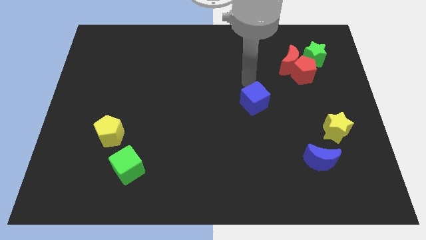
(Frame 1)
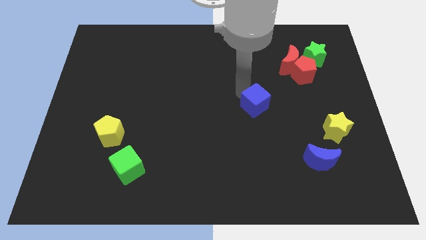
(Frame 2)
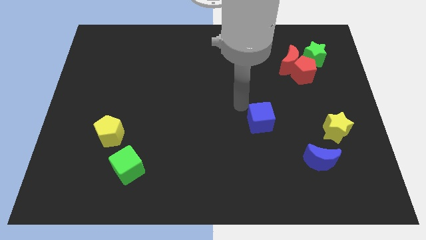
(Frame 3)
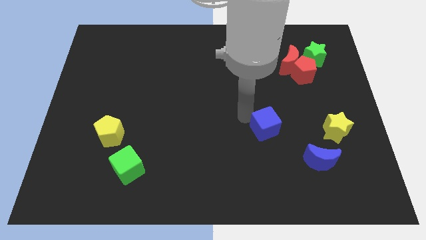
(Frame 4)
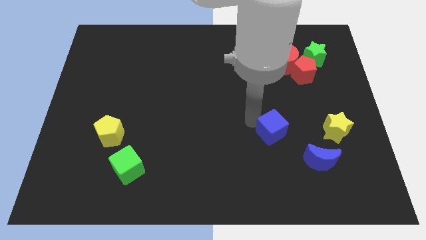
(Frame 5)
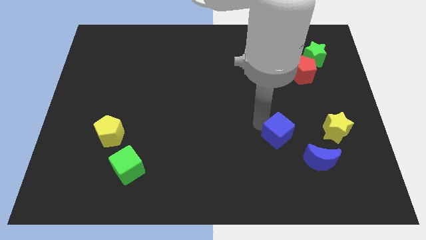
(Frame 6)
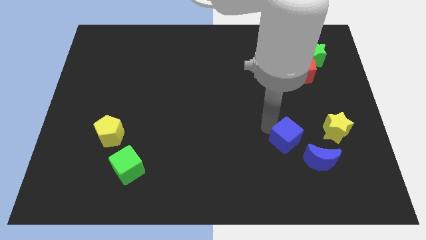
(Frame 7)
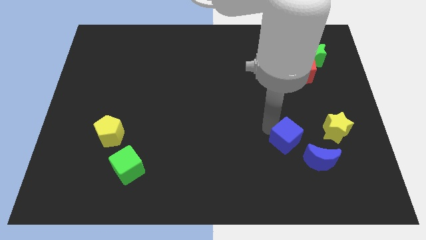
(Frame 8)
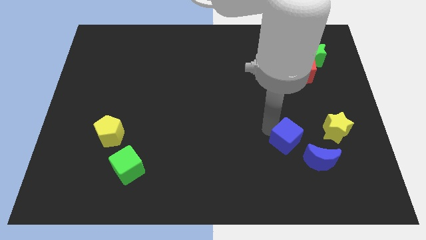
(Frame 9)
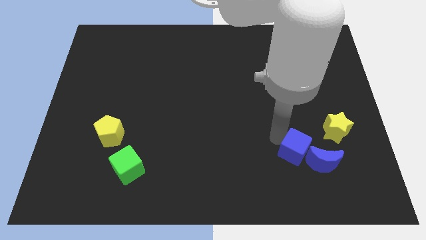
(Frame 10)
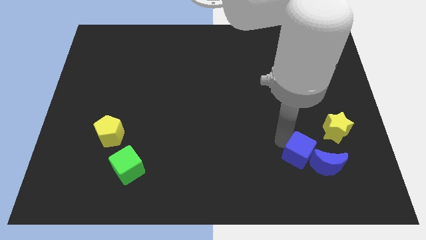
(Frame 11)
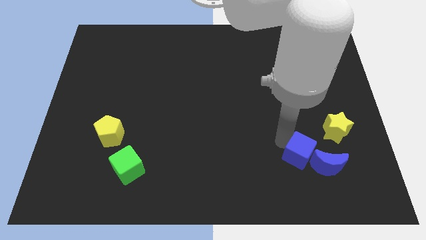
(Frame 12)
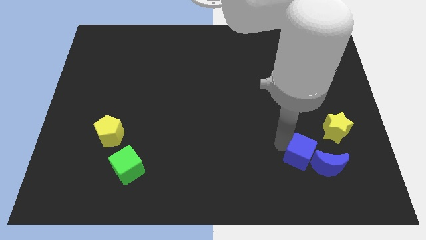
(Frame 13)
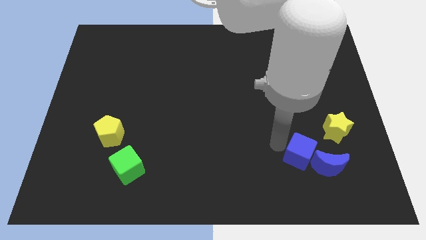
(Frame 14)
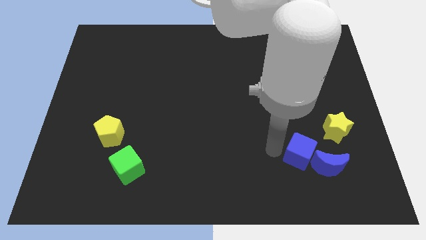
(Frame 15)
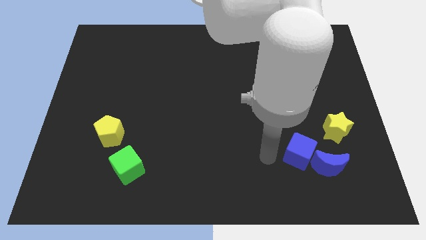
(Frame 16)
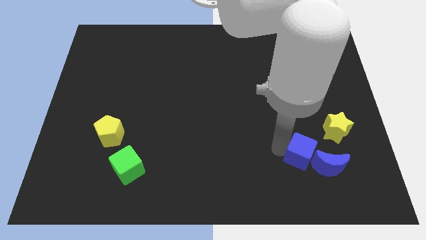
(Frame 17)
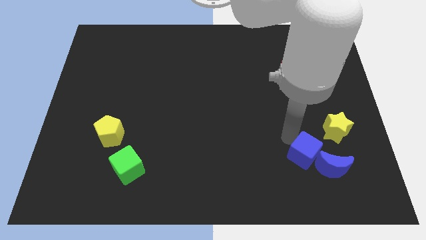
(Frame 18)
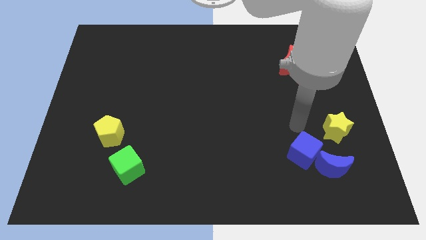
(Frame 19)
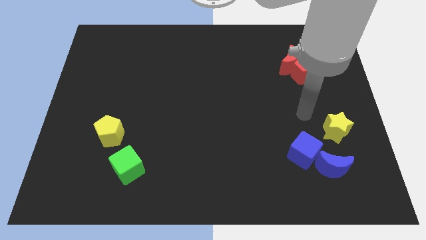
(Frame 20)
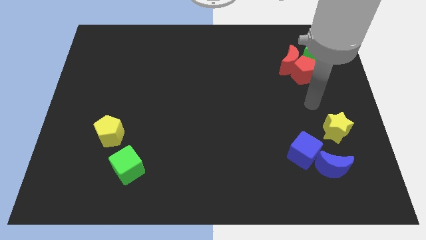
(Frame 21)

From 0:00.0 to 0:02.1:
move the blue cube left to the blue crescent

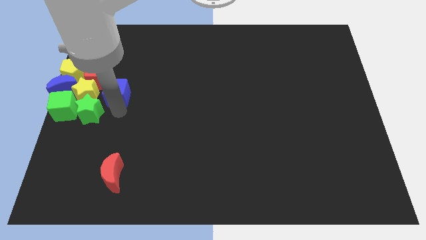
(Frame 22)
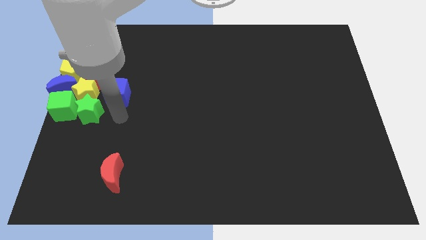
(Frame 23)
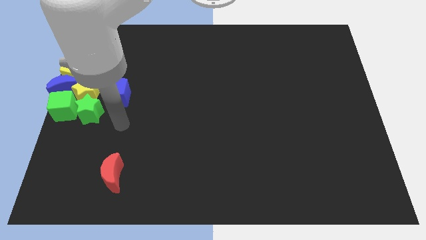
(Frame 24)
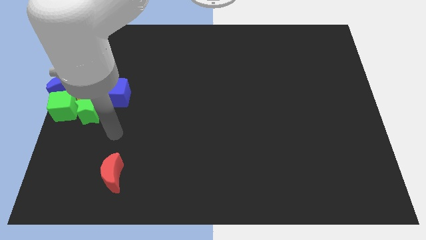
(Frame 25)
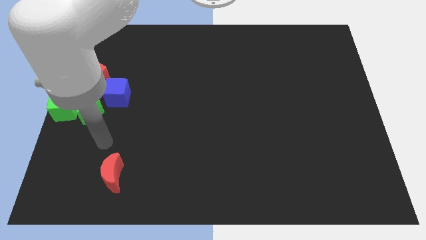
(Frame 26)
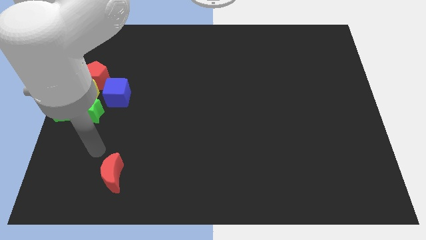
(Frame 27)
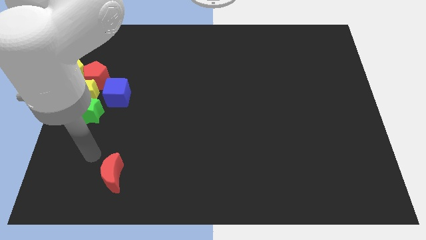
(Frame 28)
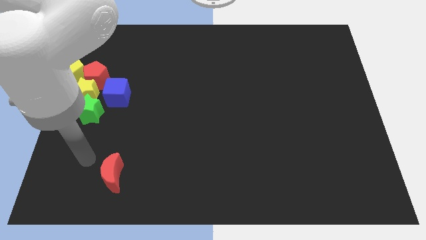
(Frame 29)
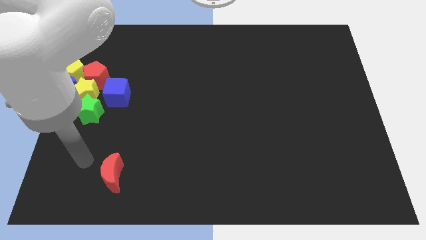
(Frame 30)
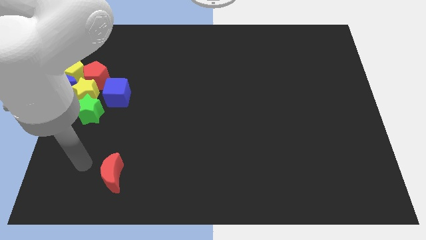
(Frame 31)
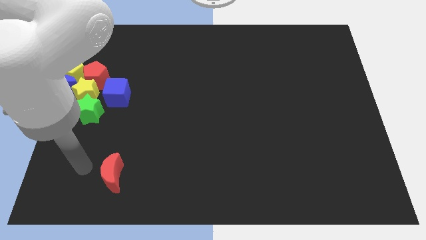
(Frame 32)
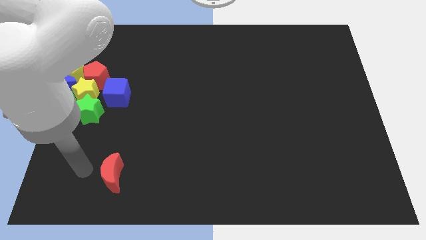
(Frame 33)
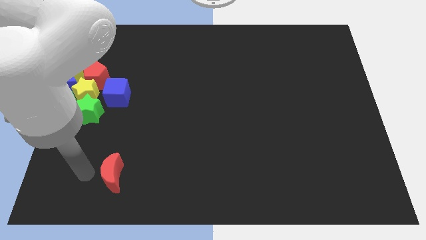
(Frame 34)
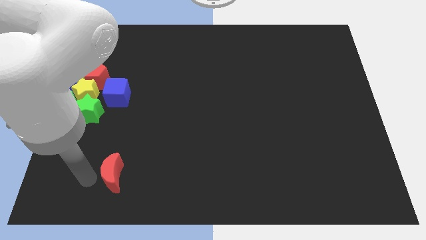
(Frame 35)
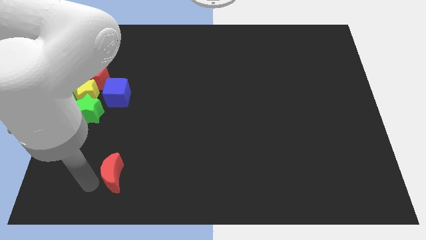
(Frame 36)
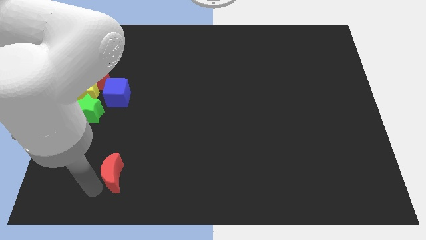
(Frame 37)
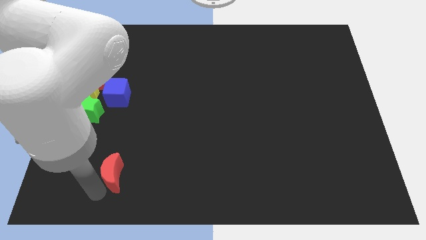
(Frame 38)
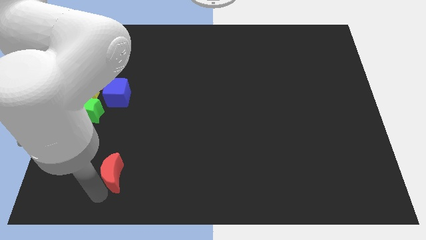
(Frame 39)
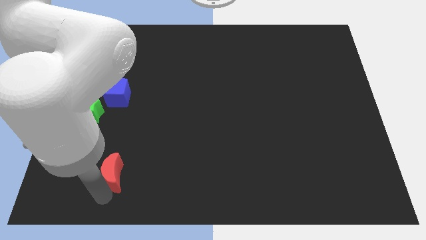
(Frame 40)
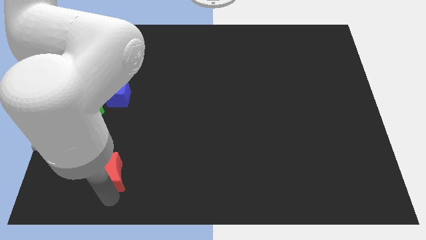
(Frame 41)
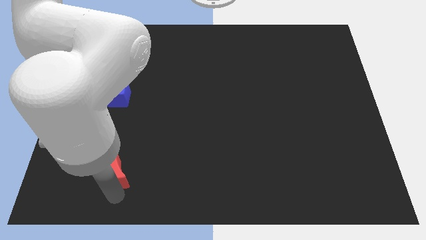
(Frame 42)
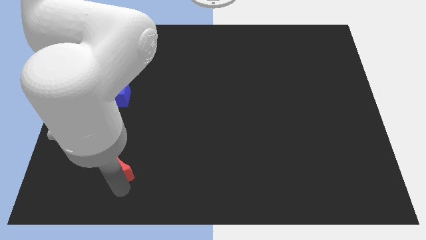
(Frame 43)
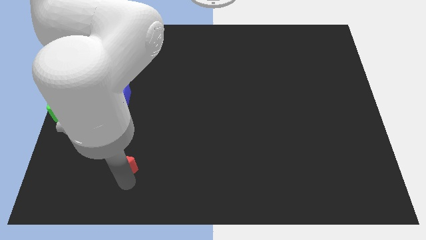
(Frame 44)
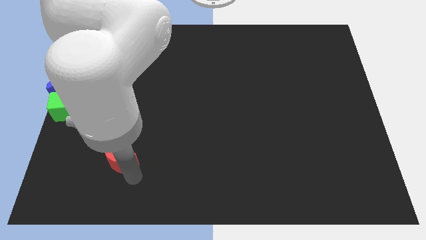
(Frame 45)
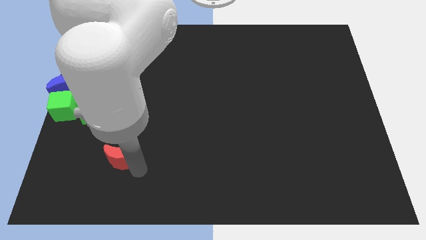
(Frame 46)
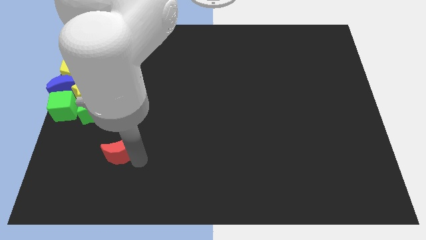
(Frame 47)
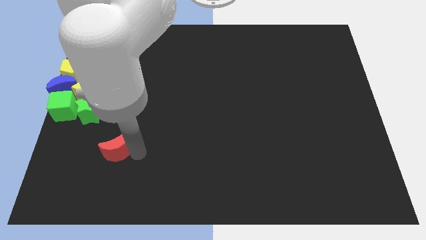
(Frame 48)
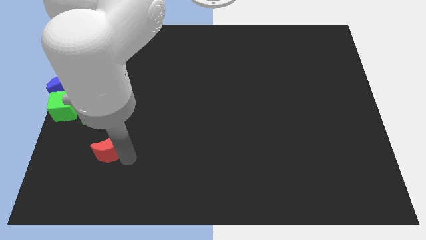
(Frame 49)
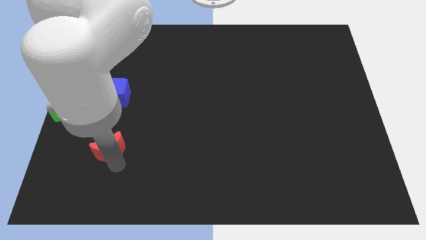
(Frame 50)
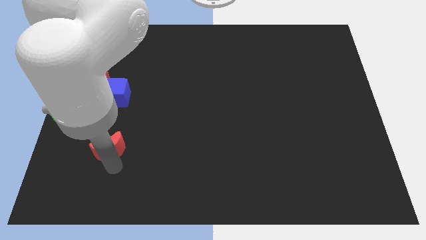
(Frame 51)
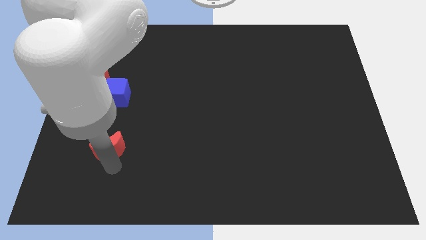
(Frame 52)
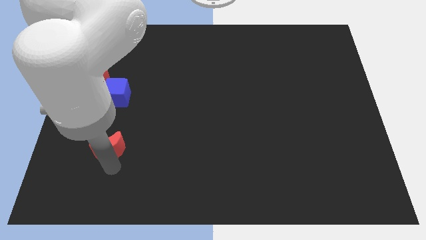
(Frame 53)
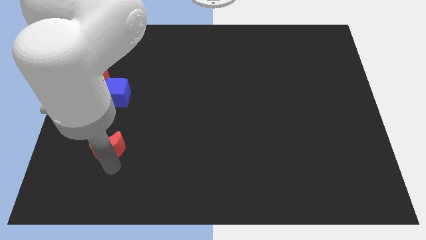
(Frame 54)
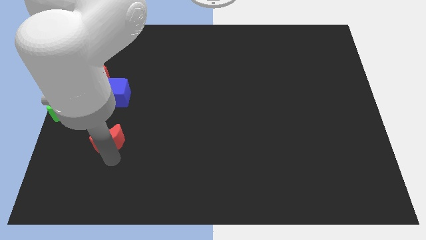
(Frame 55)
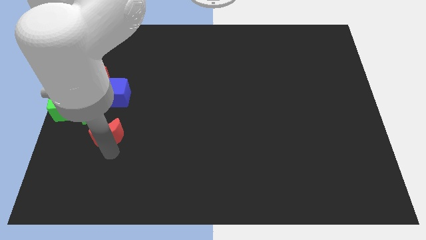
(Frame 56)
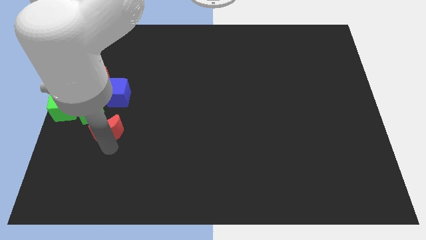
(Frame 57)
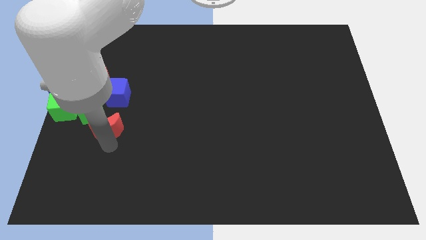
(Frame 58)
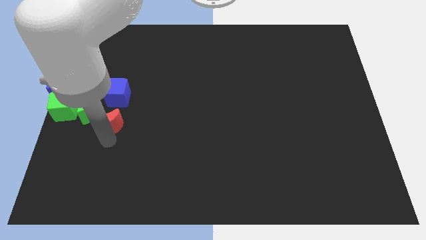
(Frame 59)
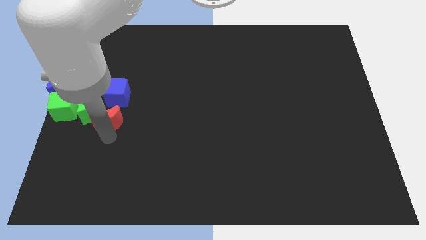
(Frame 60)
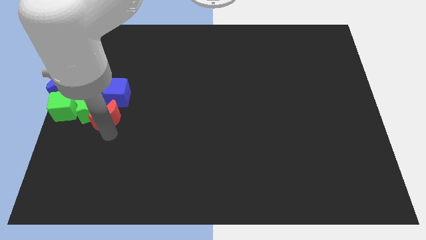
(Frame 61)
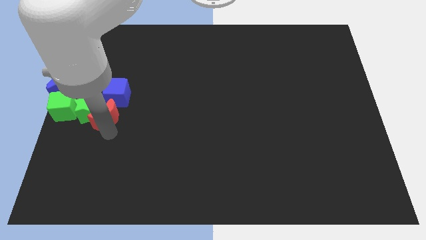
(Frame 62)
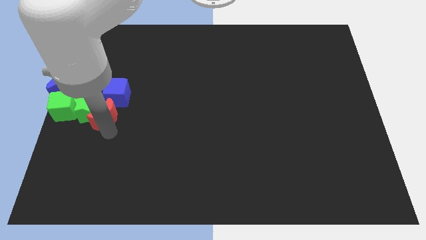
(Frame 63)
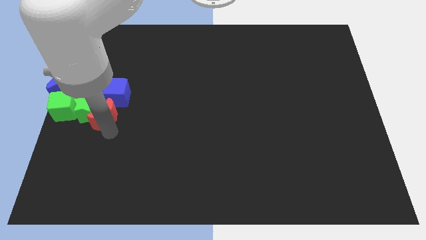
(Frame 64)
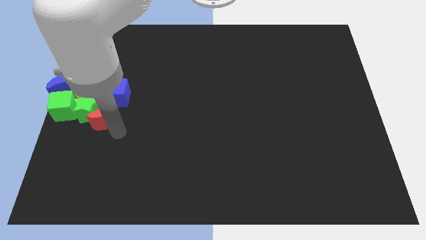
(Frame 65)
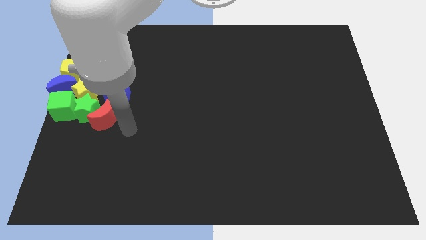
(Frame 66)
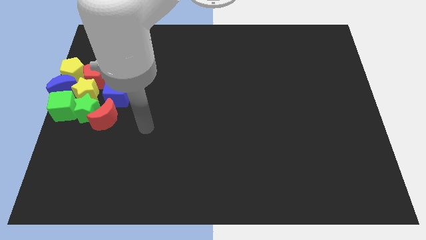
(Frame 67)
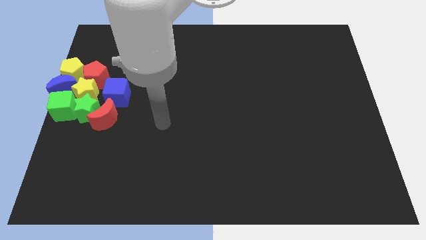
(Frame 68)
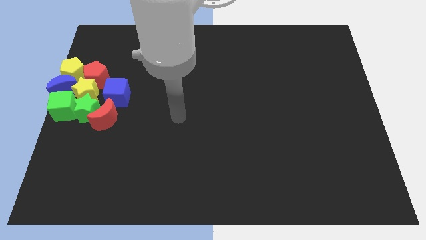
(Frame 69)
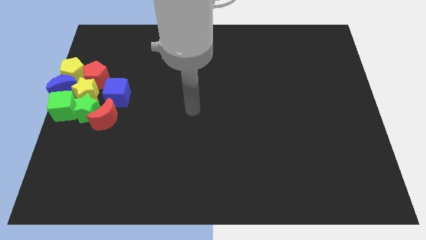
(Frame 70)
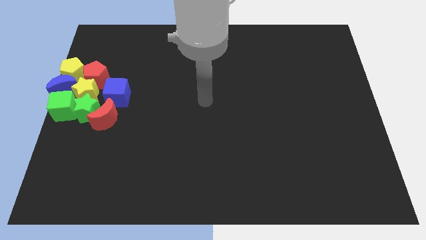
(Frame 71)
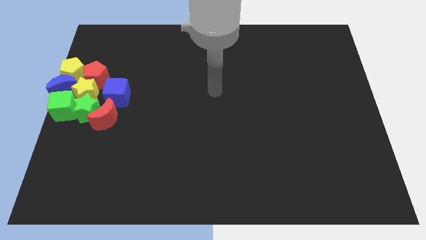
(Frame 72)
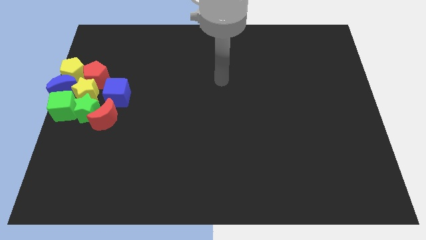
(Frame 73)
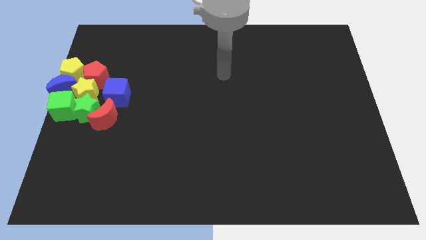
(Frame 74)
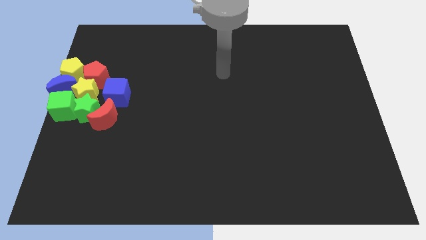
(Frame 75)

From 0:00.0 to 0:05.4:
place the red moon under the blue cube

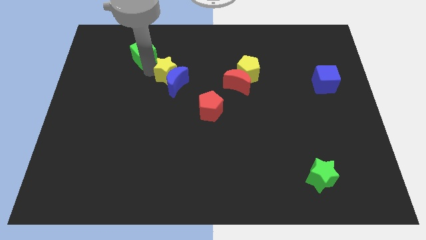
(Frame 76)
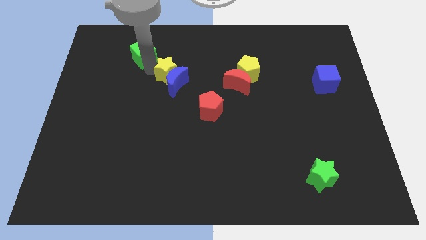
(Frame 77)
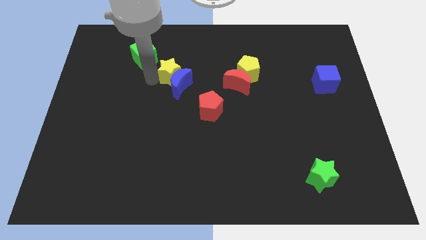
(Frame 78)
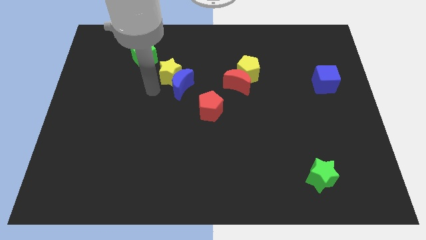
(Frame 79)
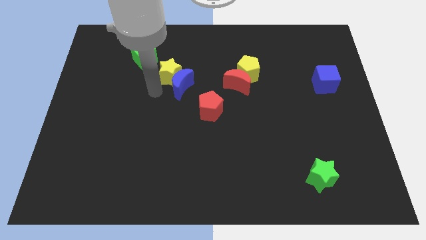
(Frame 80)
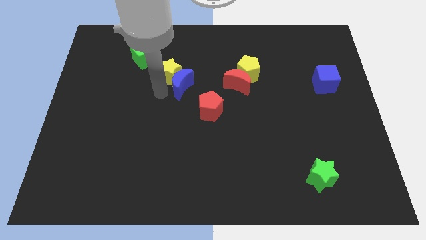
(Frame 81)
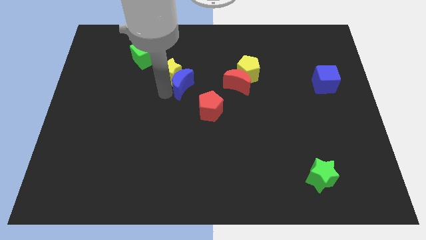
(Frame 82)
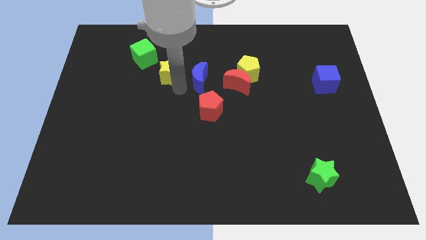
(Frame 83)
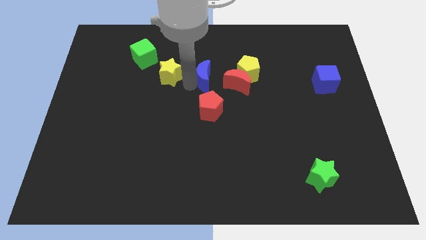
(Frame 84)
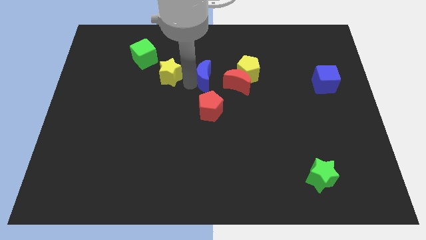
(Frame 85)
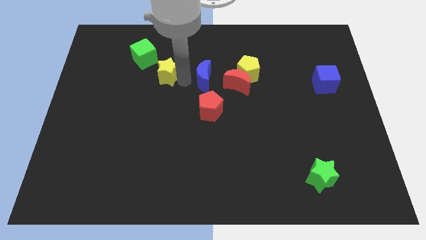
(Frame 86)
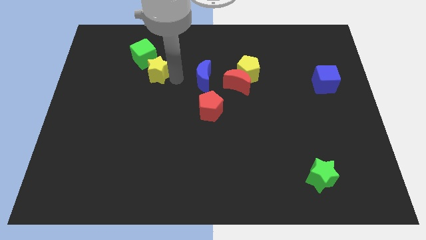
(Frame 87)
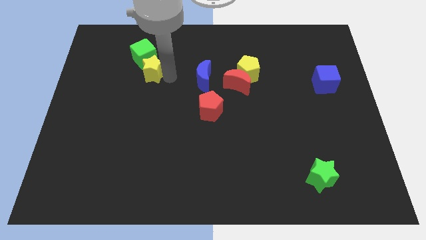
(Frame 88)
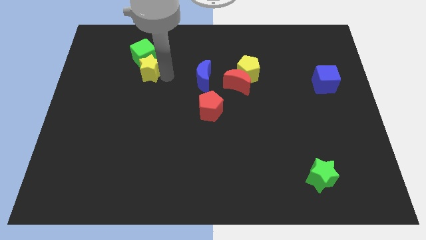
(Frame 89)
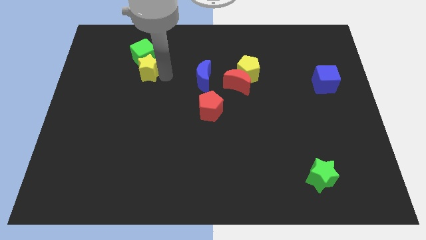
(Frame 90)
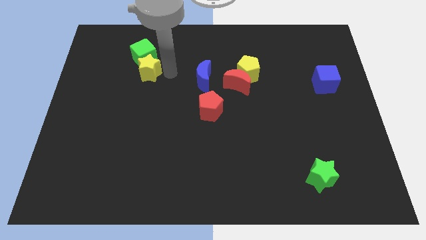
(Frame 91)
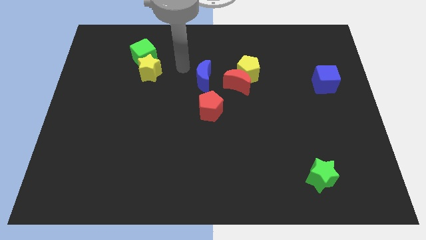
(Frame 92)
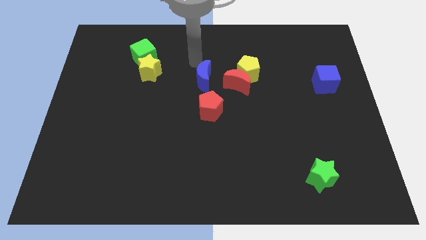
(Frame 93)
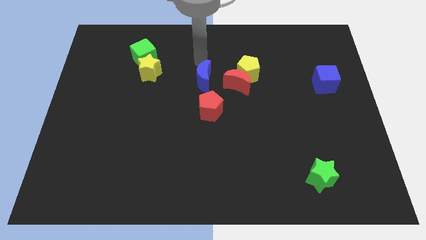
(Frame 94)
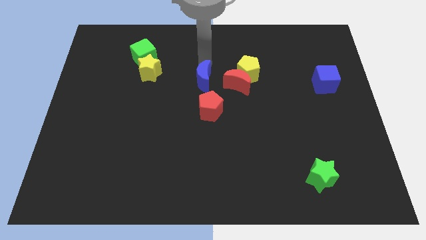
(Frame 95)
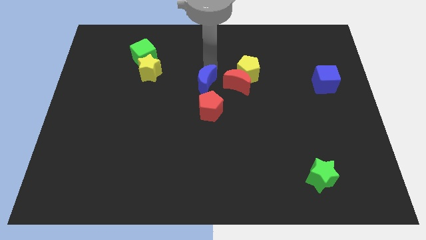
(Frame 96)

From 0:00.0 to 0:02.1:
slide blue crescent to the left of the red crescent
